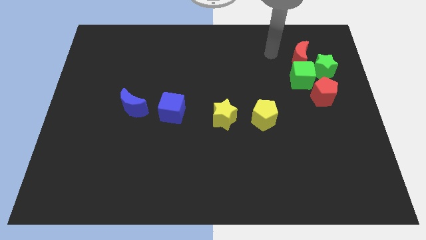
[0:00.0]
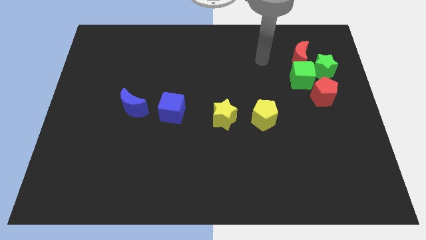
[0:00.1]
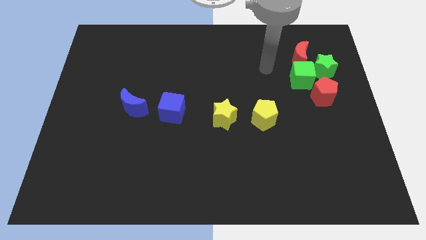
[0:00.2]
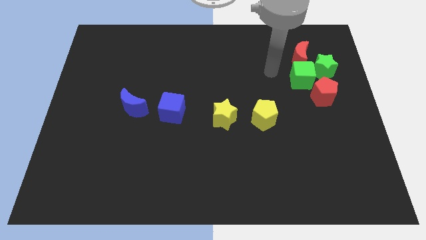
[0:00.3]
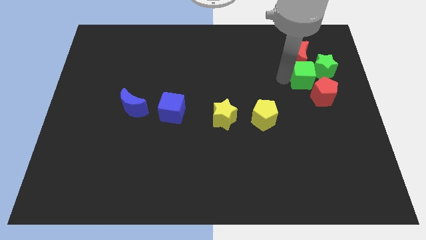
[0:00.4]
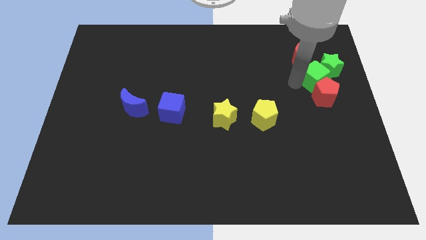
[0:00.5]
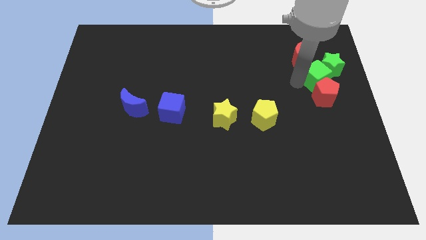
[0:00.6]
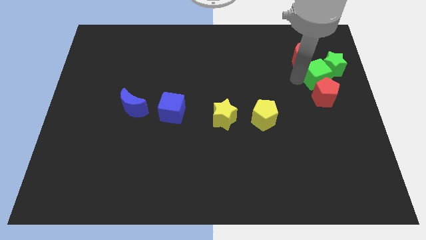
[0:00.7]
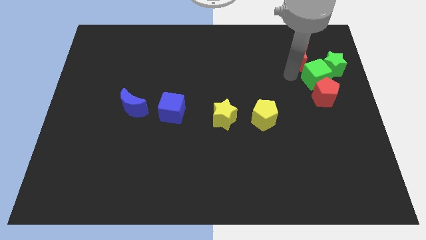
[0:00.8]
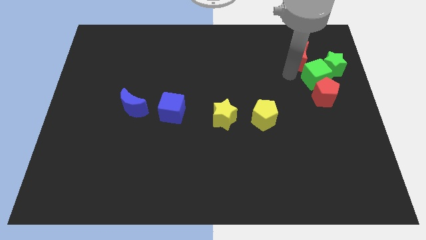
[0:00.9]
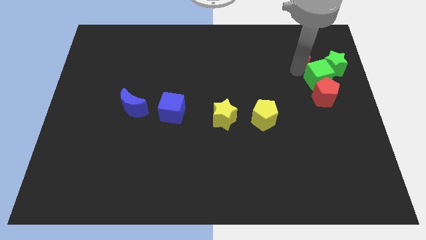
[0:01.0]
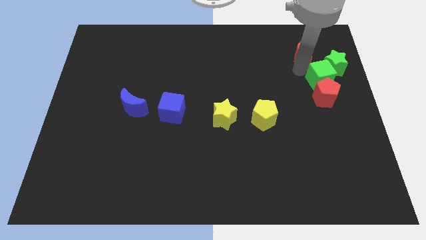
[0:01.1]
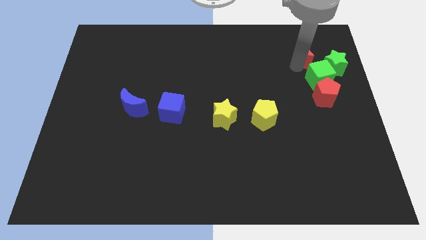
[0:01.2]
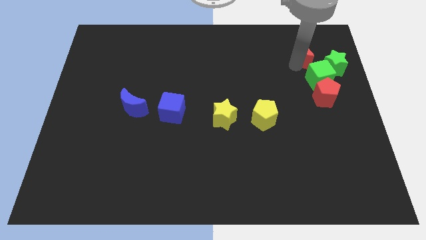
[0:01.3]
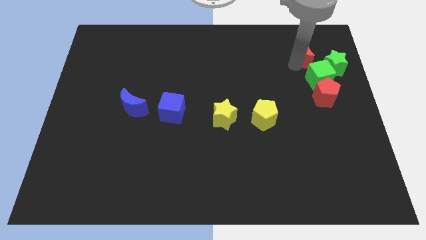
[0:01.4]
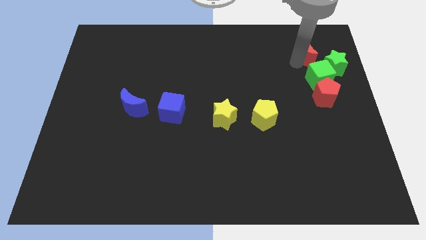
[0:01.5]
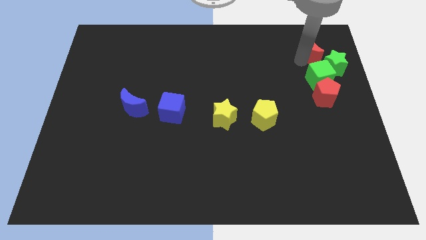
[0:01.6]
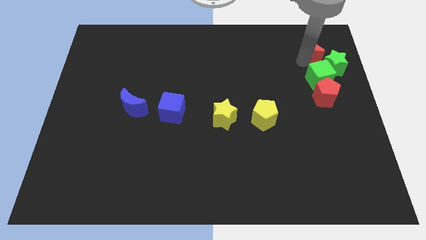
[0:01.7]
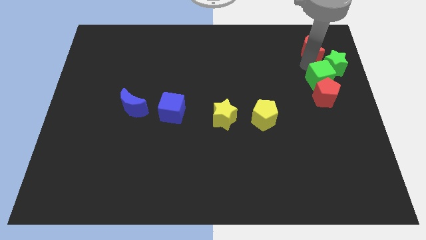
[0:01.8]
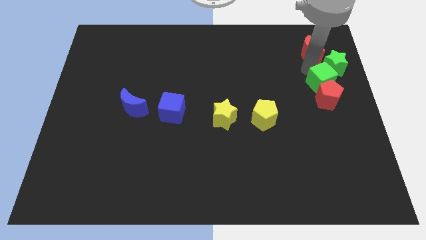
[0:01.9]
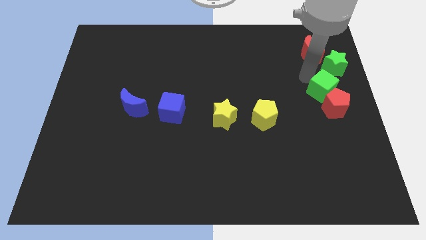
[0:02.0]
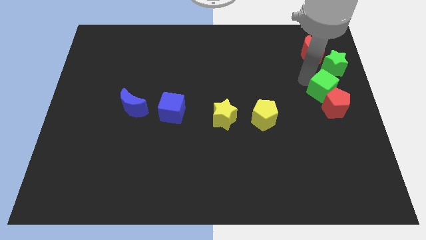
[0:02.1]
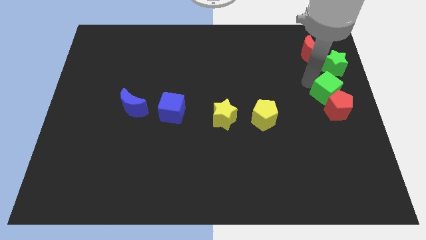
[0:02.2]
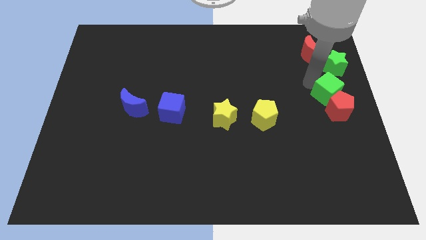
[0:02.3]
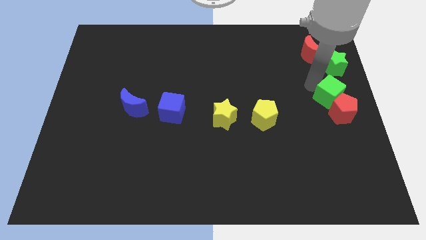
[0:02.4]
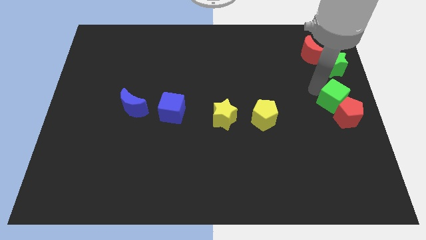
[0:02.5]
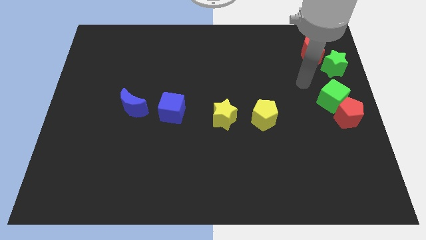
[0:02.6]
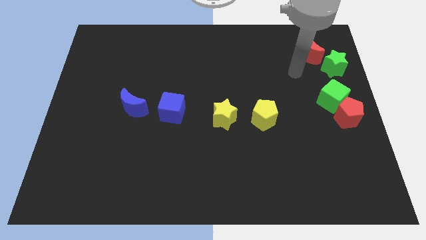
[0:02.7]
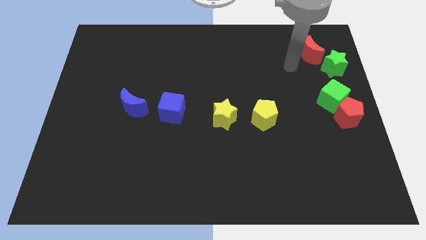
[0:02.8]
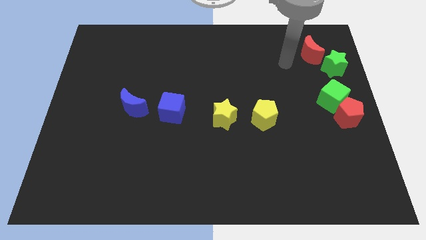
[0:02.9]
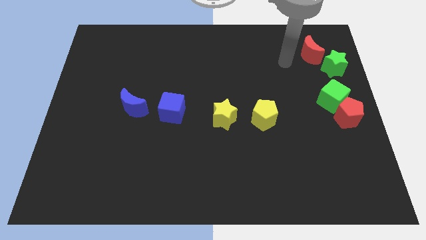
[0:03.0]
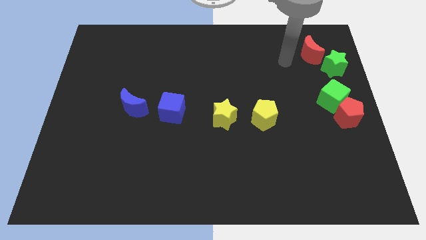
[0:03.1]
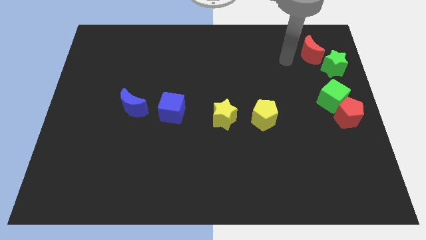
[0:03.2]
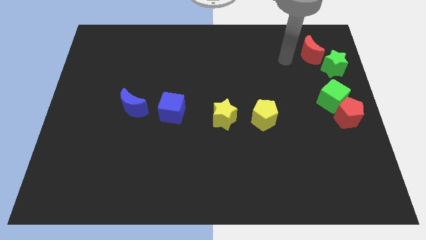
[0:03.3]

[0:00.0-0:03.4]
separate the green cube from the red crescent and green star

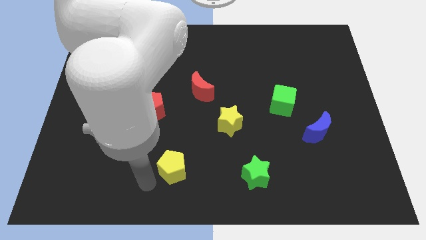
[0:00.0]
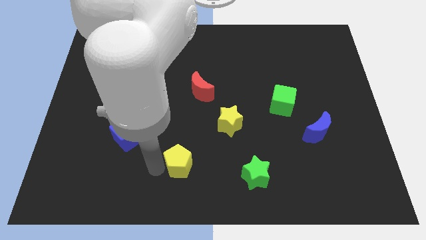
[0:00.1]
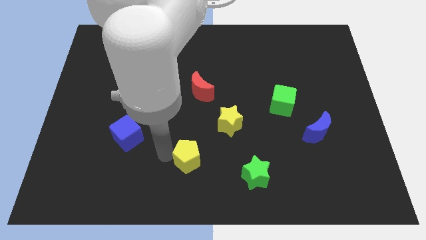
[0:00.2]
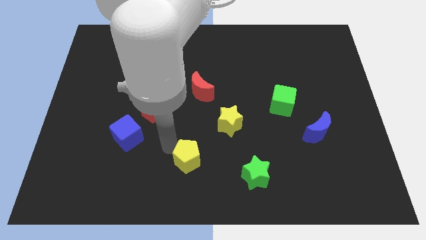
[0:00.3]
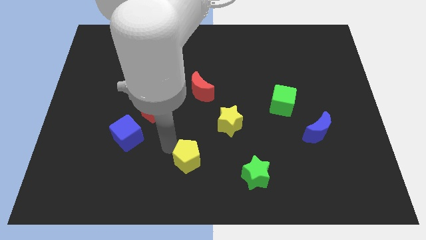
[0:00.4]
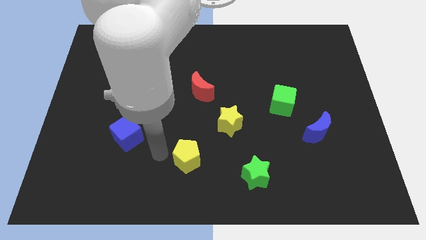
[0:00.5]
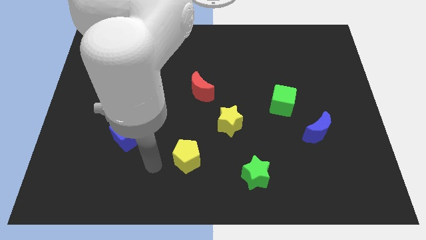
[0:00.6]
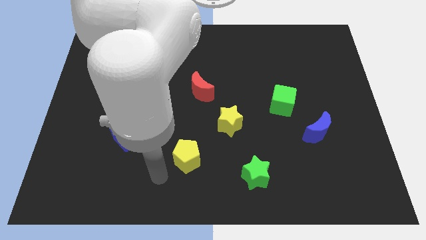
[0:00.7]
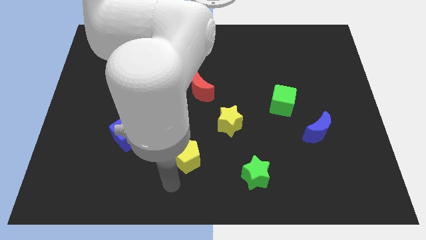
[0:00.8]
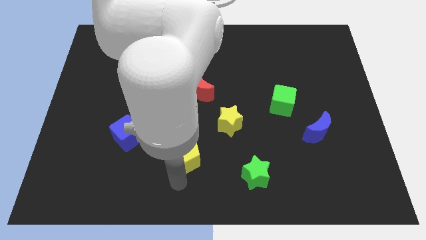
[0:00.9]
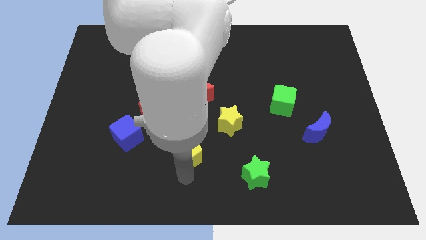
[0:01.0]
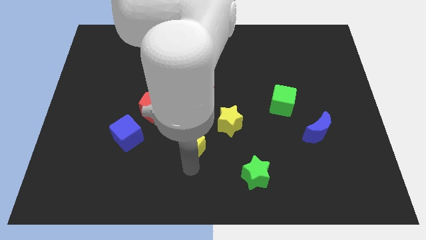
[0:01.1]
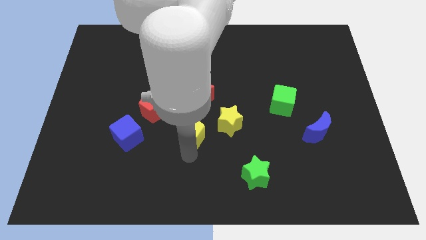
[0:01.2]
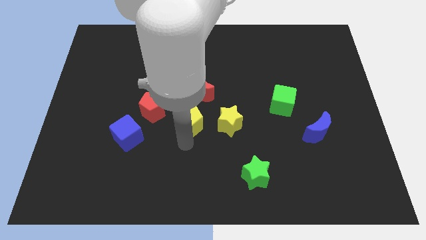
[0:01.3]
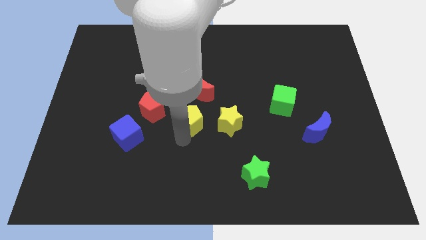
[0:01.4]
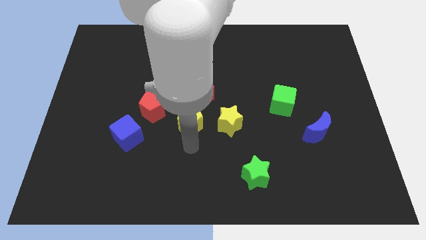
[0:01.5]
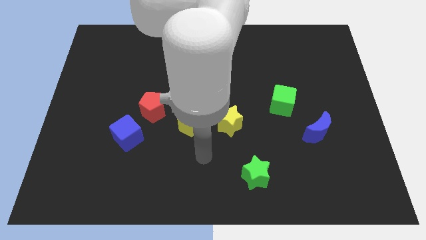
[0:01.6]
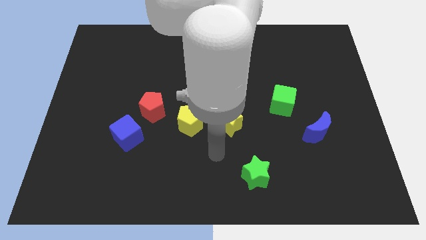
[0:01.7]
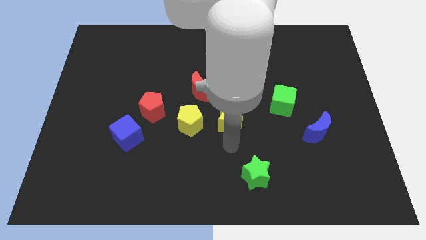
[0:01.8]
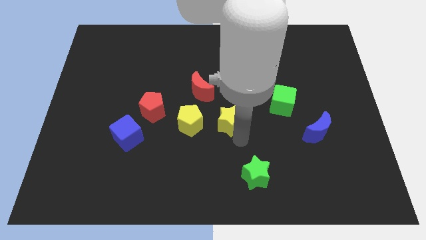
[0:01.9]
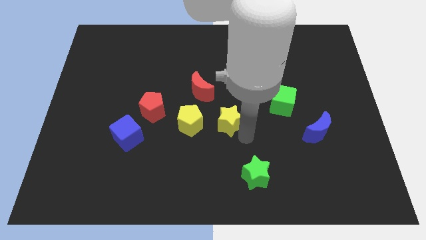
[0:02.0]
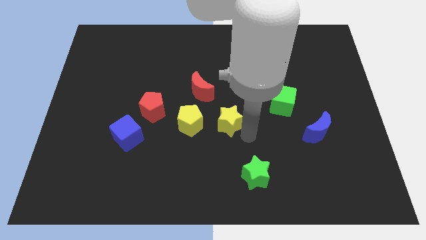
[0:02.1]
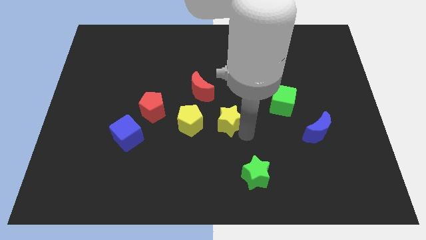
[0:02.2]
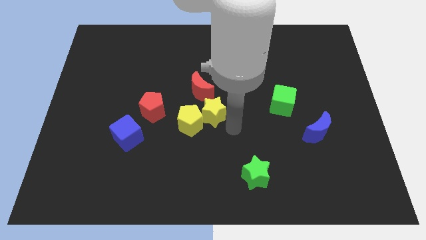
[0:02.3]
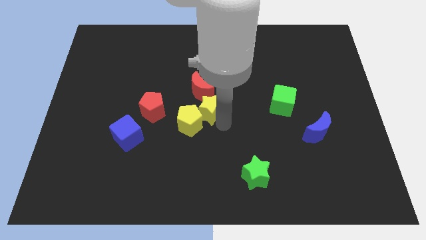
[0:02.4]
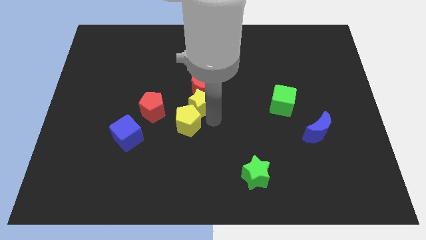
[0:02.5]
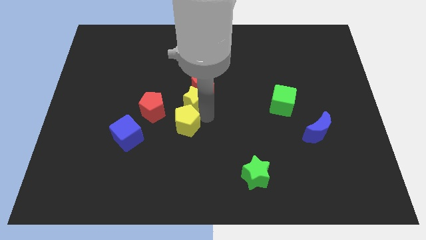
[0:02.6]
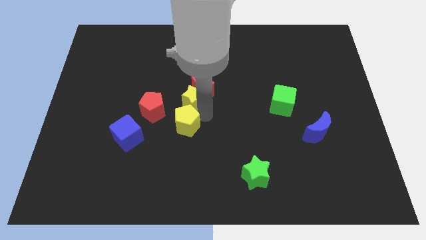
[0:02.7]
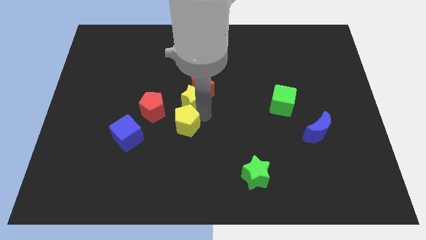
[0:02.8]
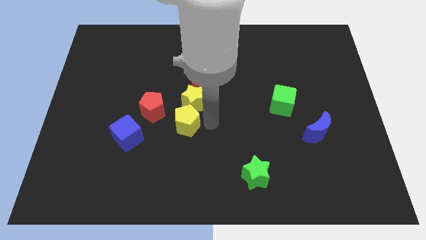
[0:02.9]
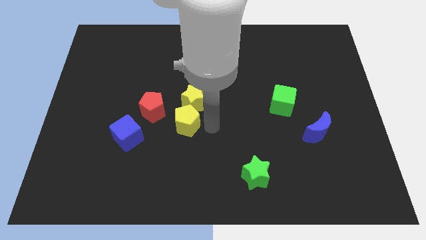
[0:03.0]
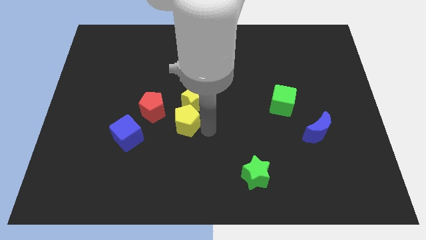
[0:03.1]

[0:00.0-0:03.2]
place the yellow blocks at the center of the board

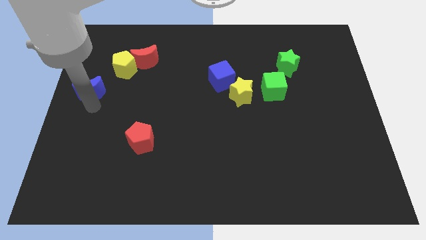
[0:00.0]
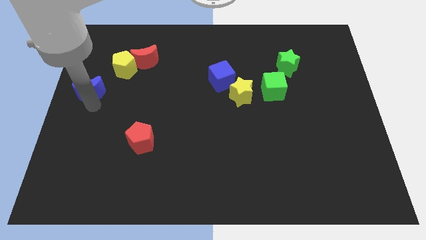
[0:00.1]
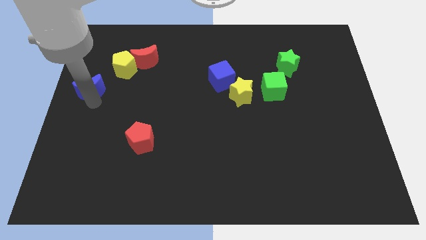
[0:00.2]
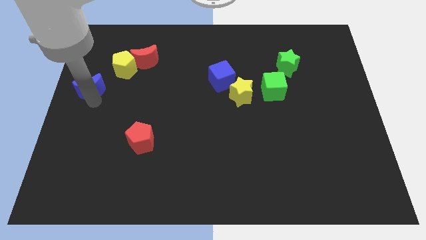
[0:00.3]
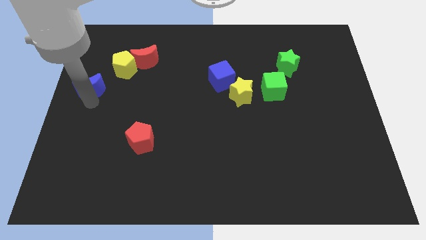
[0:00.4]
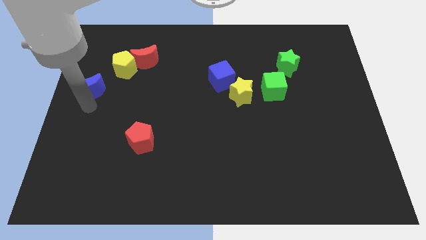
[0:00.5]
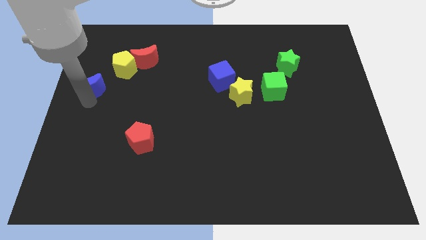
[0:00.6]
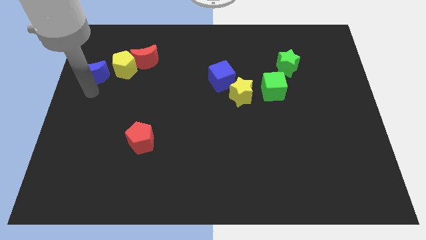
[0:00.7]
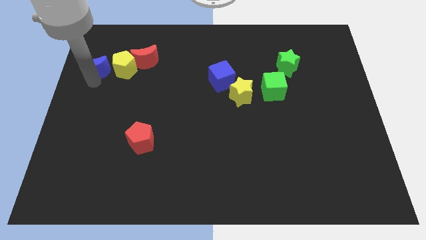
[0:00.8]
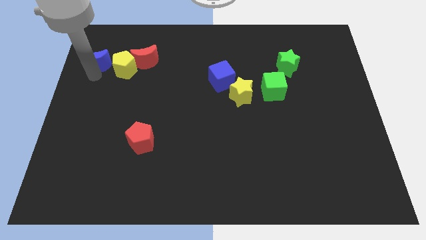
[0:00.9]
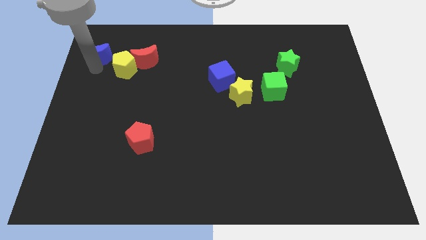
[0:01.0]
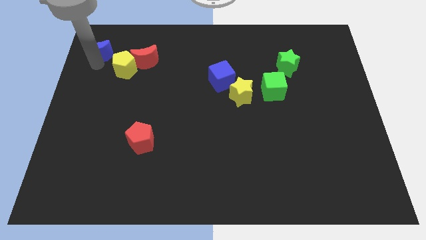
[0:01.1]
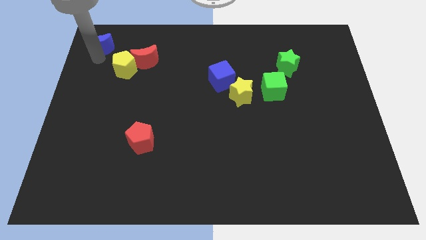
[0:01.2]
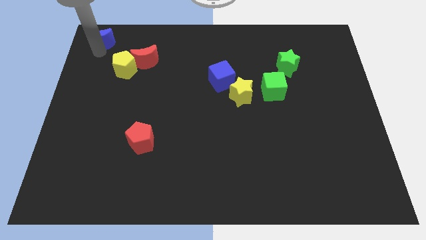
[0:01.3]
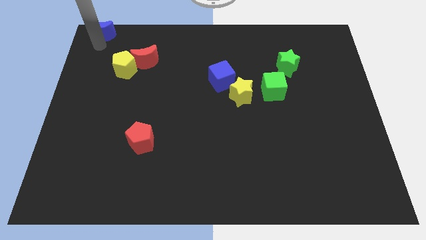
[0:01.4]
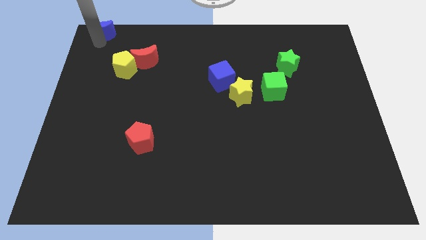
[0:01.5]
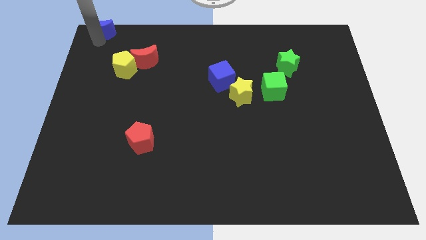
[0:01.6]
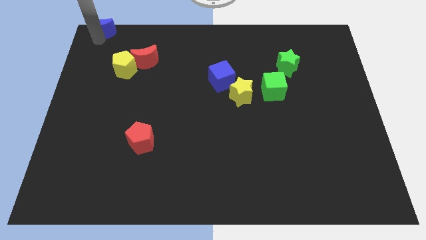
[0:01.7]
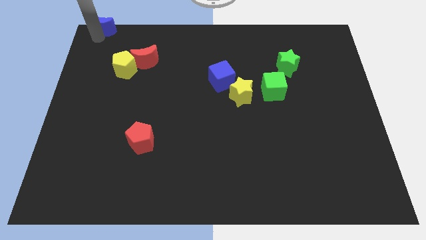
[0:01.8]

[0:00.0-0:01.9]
move the blue crescent to the top left corner

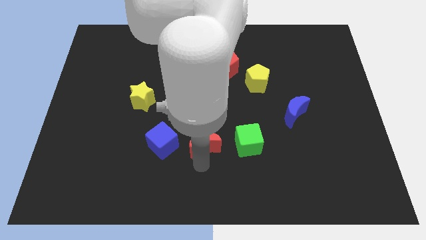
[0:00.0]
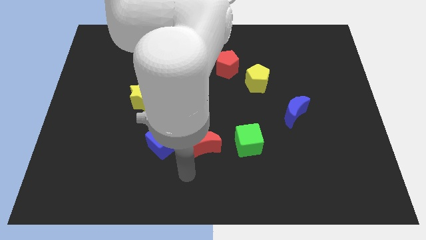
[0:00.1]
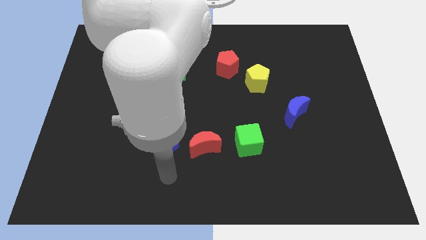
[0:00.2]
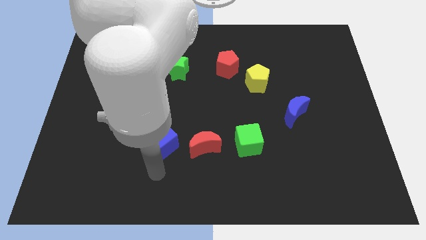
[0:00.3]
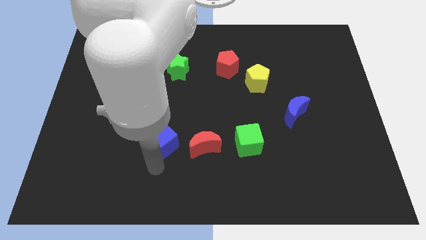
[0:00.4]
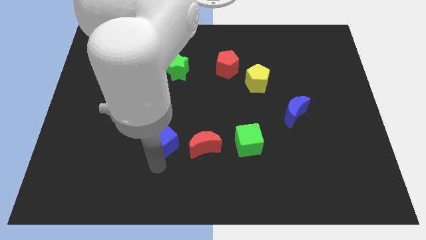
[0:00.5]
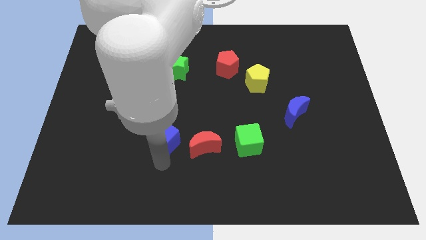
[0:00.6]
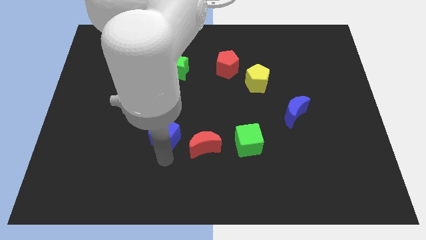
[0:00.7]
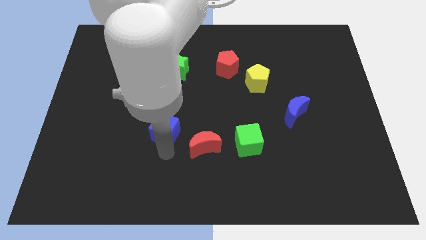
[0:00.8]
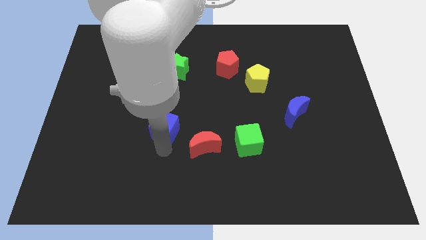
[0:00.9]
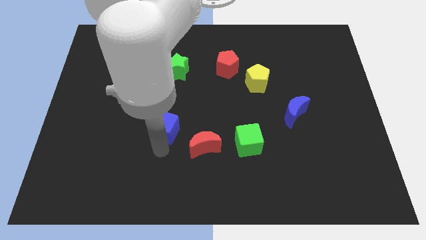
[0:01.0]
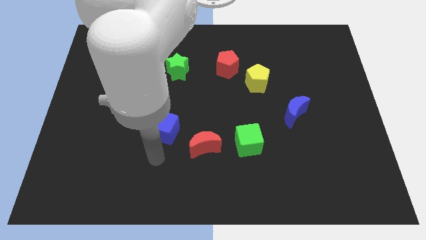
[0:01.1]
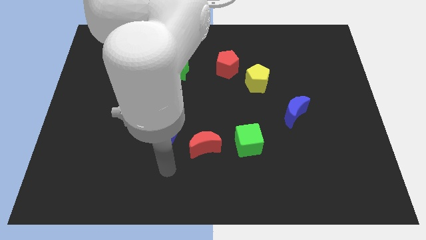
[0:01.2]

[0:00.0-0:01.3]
slightly push the blue cube towards up
